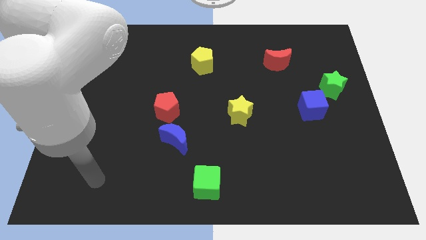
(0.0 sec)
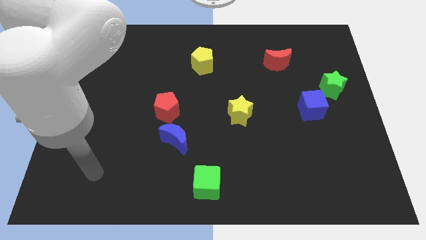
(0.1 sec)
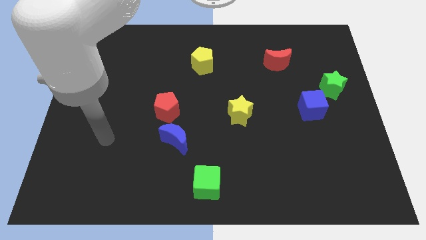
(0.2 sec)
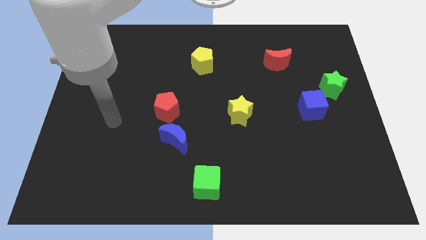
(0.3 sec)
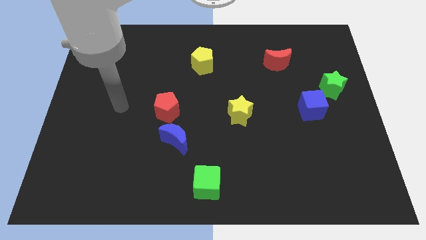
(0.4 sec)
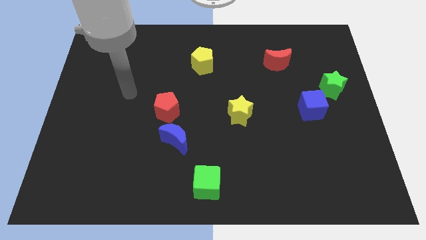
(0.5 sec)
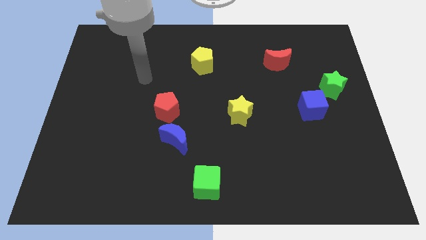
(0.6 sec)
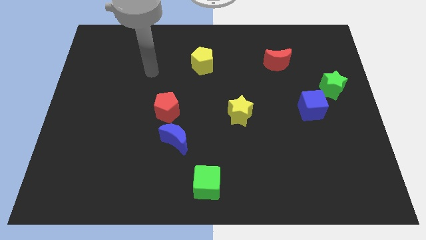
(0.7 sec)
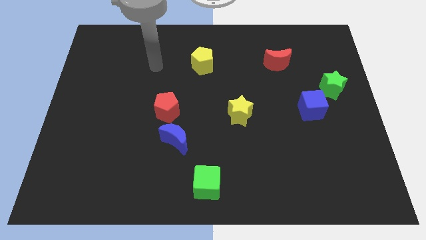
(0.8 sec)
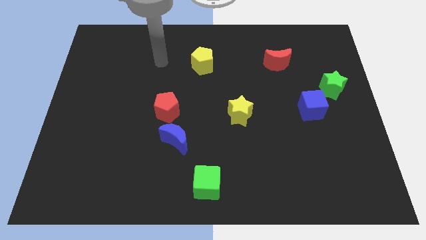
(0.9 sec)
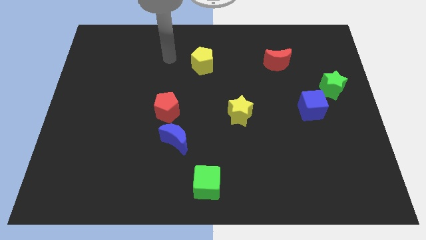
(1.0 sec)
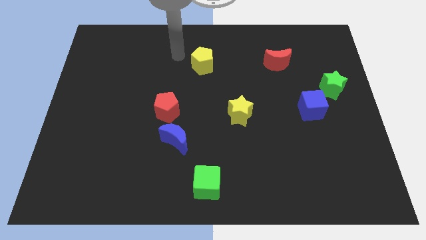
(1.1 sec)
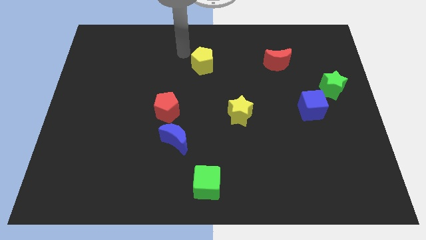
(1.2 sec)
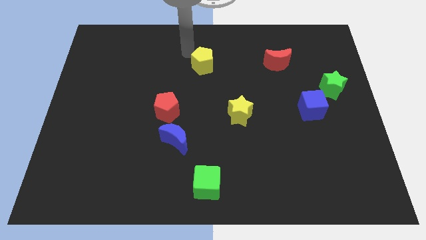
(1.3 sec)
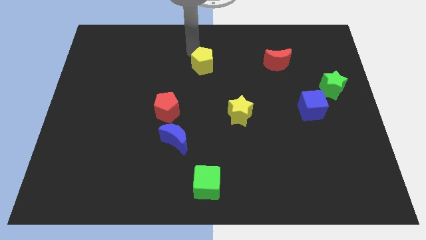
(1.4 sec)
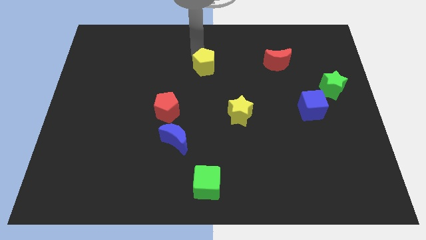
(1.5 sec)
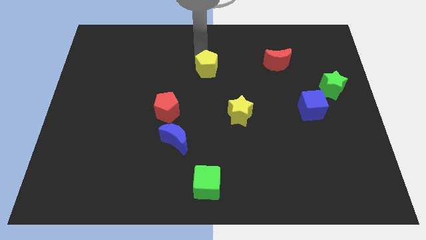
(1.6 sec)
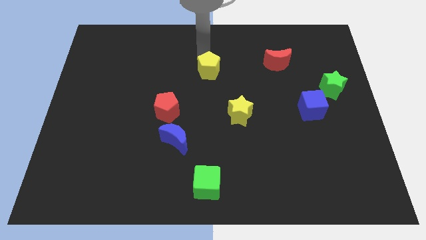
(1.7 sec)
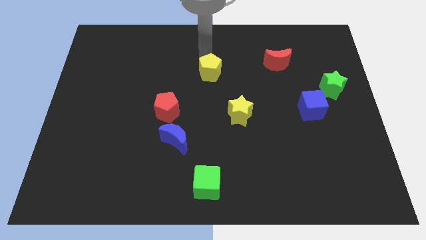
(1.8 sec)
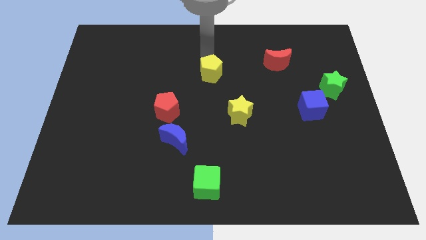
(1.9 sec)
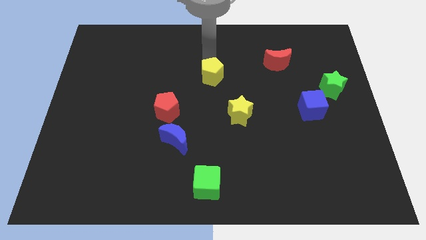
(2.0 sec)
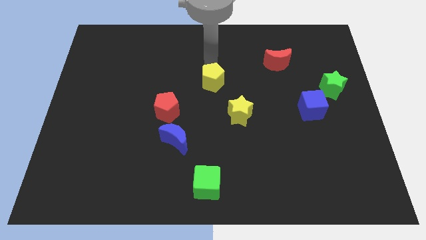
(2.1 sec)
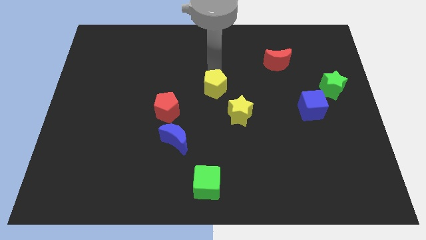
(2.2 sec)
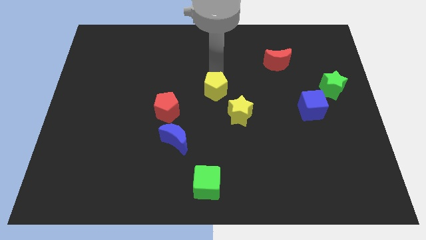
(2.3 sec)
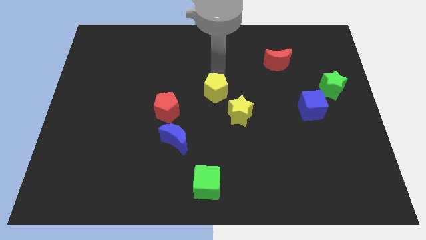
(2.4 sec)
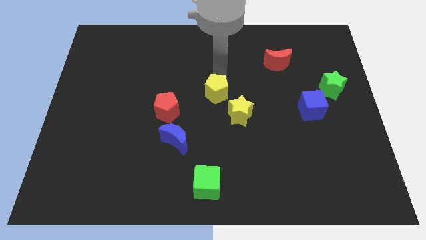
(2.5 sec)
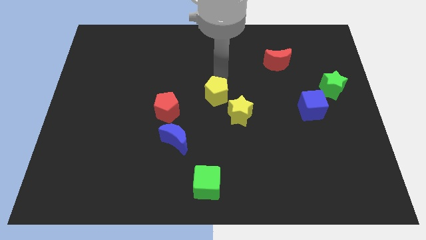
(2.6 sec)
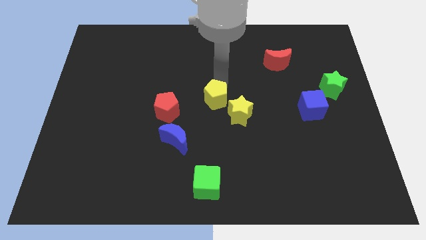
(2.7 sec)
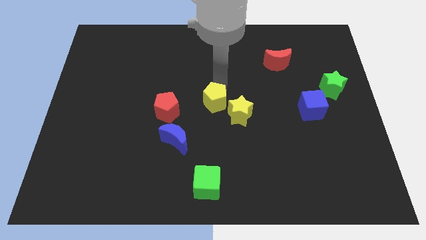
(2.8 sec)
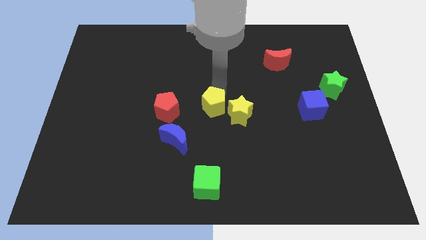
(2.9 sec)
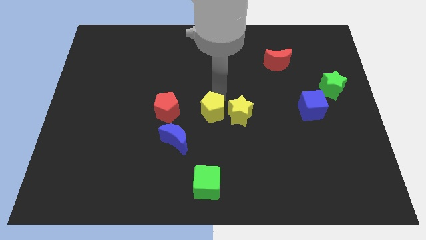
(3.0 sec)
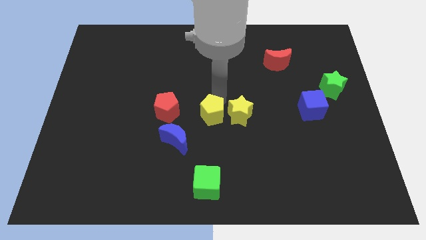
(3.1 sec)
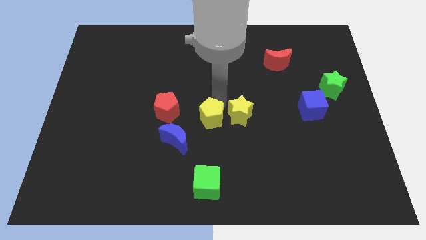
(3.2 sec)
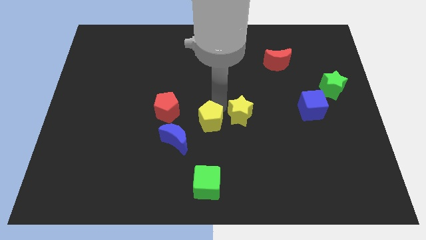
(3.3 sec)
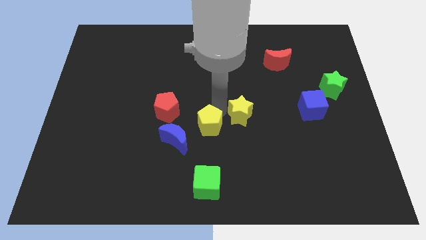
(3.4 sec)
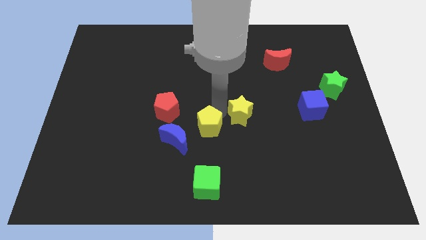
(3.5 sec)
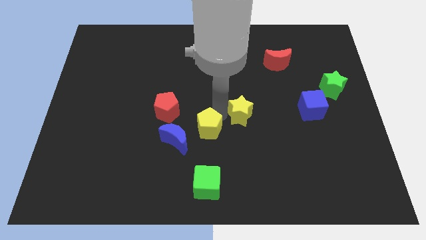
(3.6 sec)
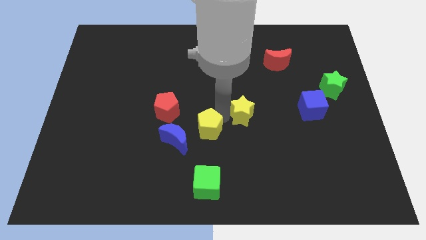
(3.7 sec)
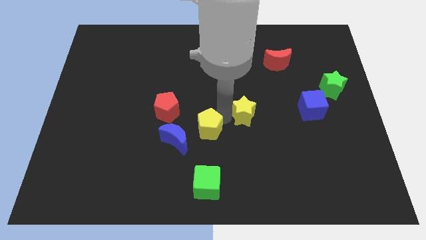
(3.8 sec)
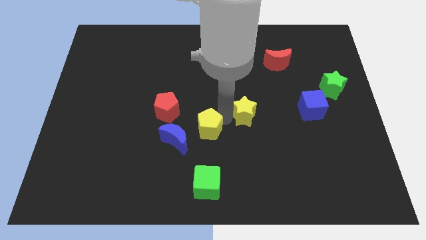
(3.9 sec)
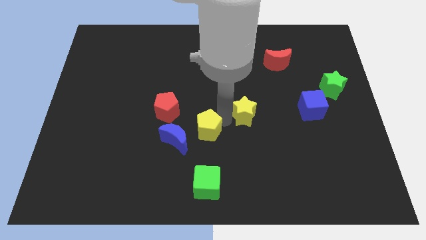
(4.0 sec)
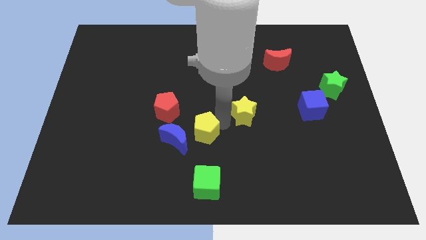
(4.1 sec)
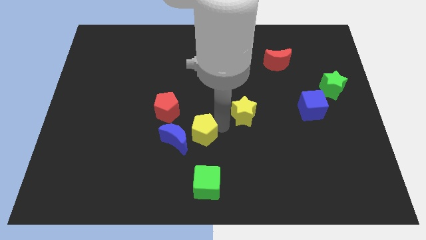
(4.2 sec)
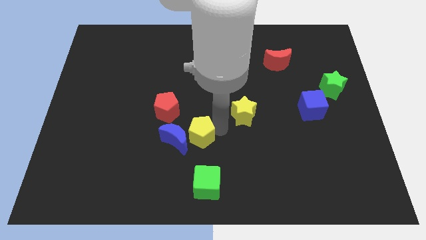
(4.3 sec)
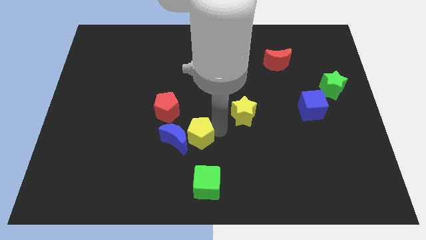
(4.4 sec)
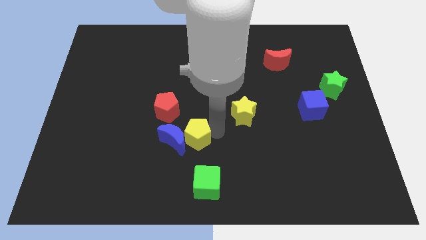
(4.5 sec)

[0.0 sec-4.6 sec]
put the yellow pentagon close to the blue moon

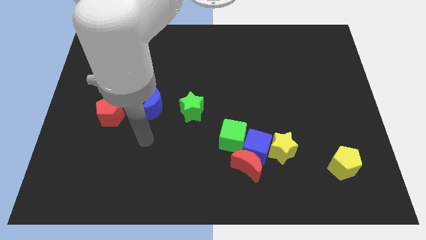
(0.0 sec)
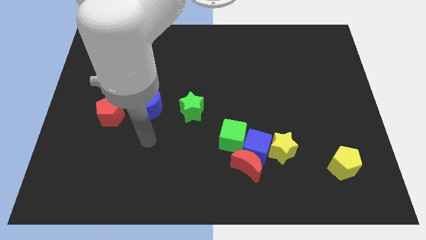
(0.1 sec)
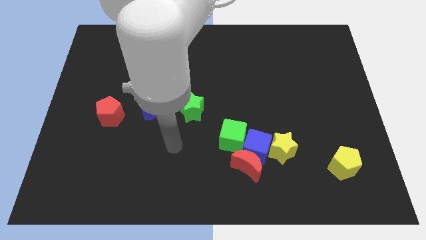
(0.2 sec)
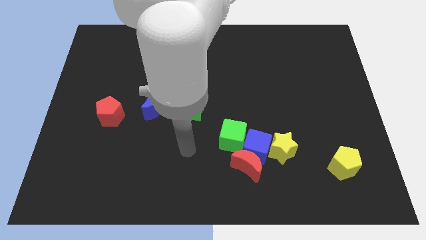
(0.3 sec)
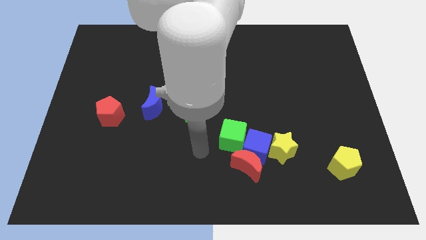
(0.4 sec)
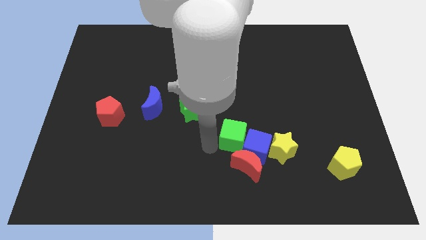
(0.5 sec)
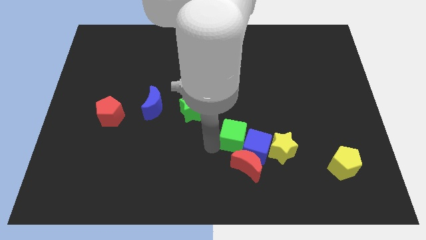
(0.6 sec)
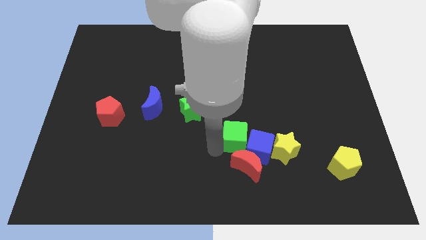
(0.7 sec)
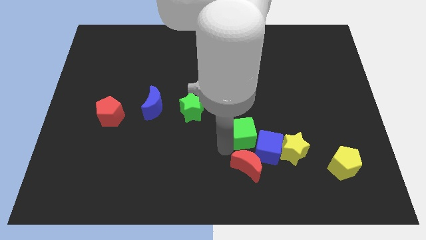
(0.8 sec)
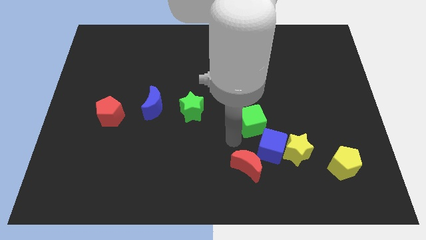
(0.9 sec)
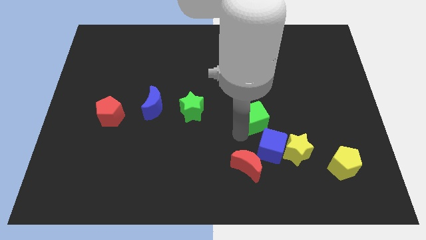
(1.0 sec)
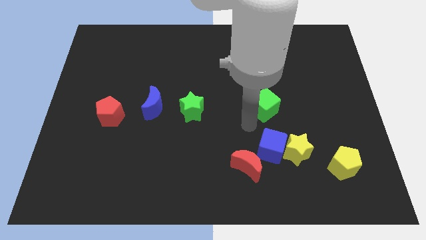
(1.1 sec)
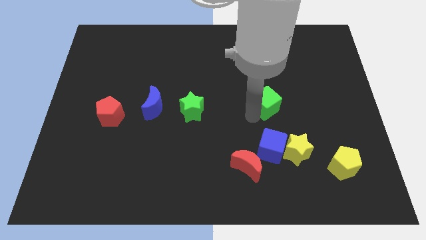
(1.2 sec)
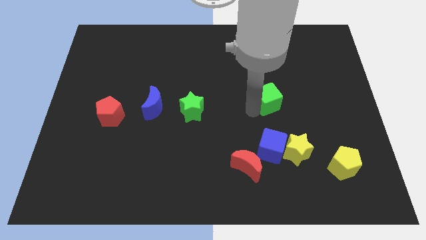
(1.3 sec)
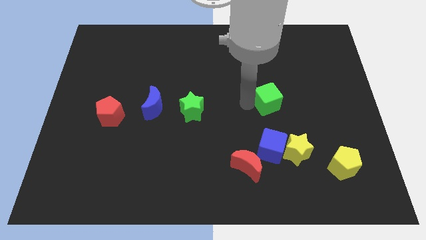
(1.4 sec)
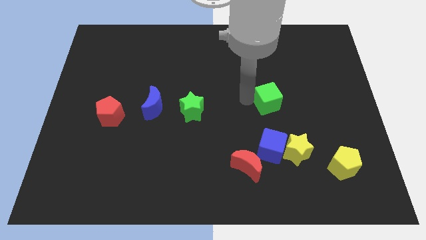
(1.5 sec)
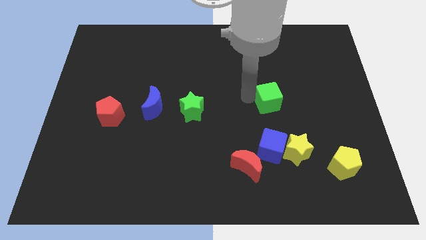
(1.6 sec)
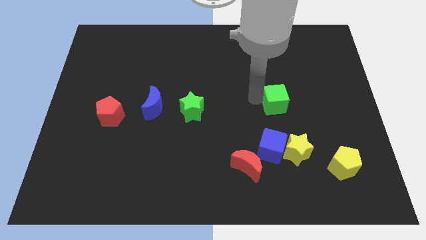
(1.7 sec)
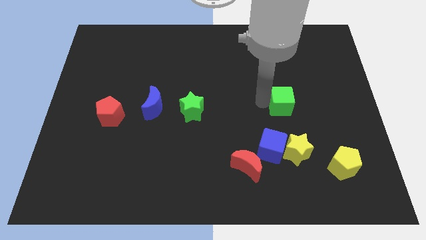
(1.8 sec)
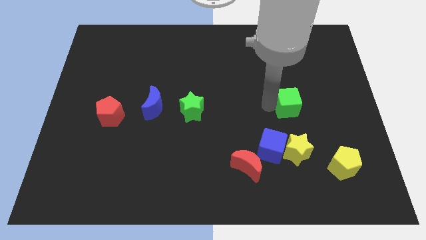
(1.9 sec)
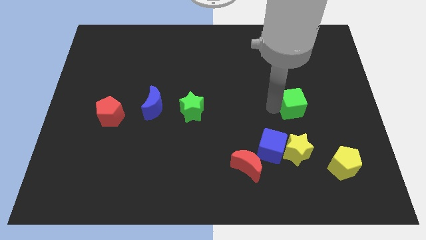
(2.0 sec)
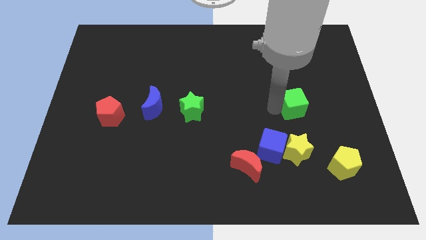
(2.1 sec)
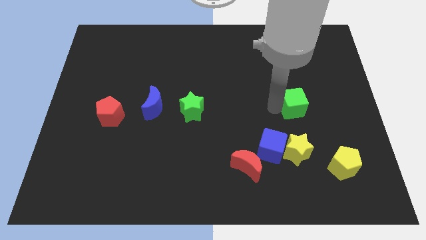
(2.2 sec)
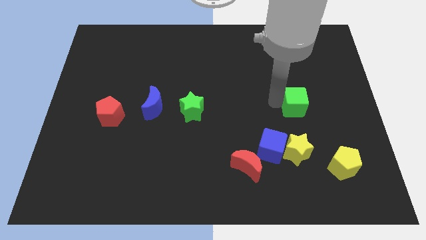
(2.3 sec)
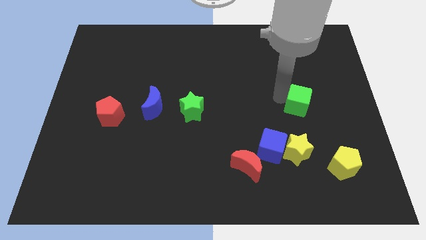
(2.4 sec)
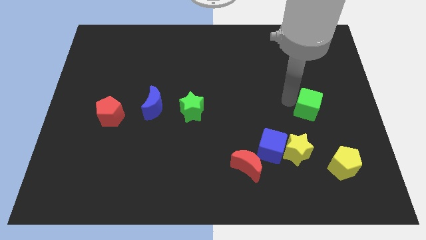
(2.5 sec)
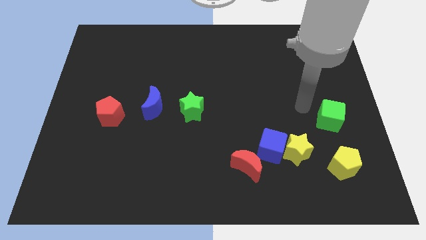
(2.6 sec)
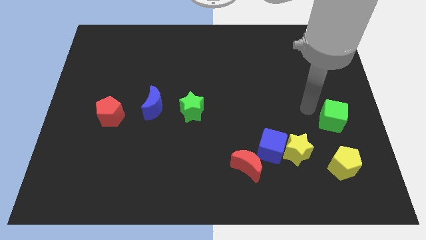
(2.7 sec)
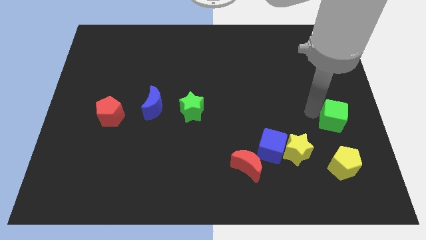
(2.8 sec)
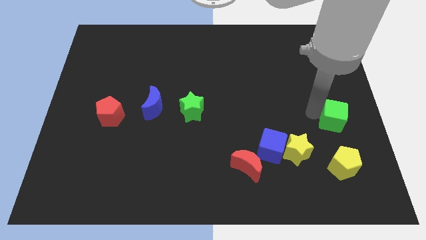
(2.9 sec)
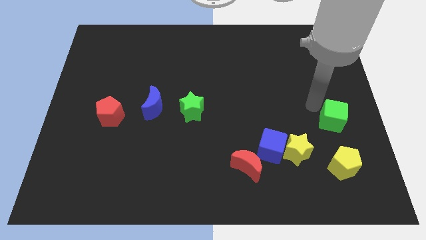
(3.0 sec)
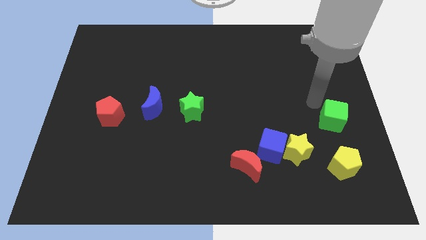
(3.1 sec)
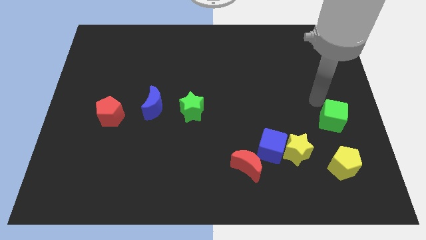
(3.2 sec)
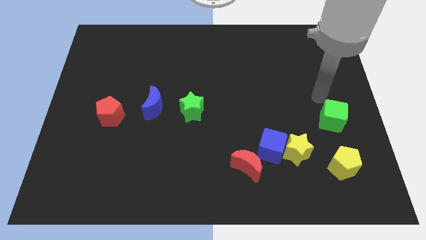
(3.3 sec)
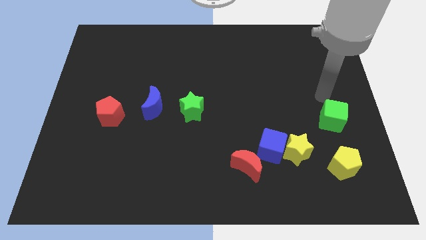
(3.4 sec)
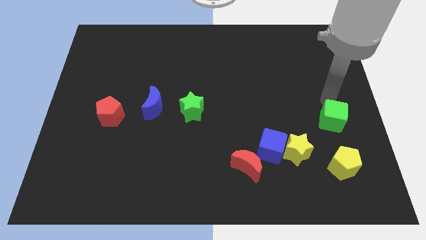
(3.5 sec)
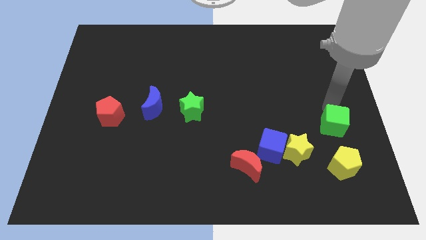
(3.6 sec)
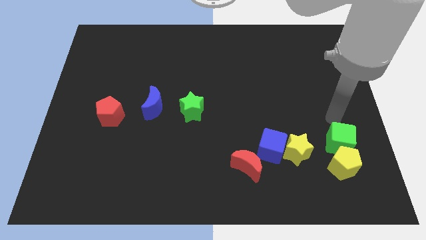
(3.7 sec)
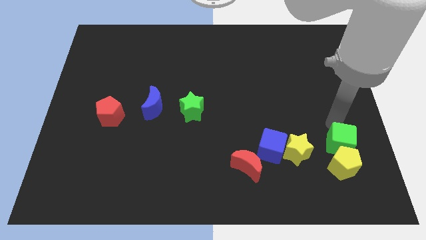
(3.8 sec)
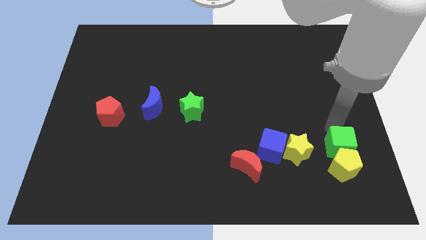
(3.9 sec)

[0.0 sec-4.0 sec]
slide the green cube to the yellow pentagon
